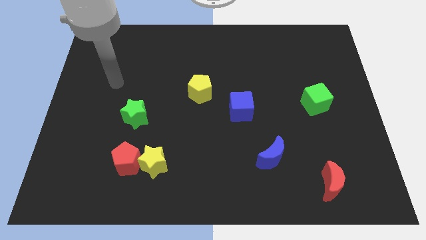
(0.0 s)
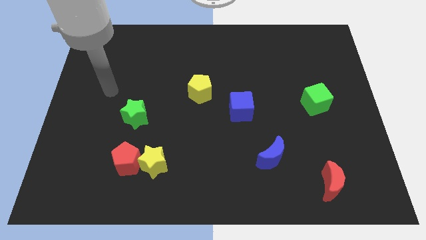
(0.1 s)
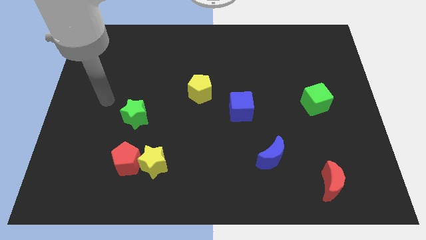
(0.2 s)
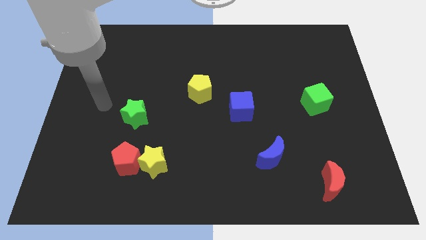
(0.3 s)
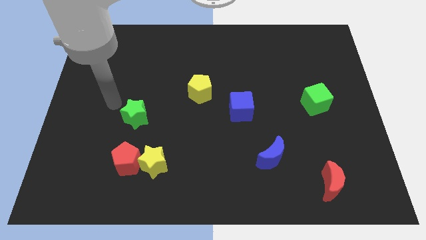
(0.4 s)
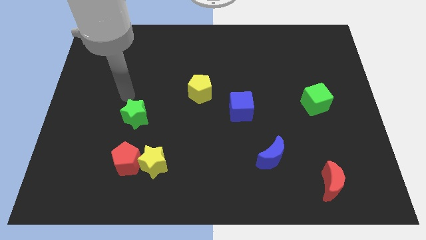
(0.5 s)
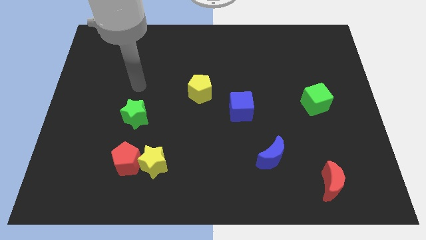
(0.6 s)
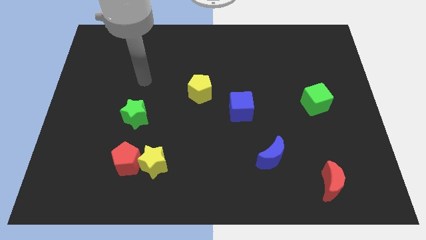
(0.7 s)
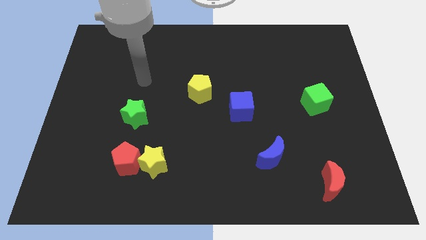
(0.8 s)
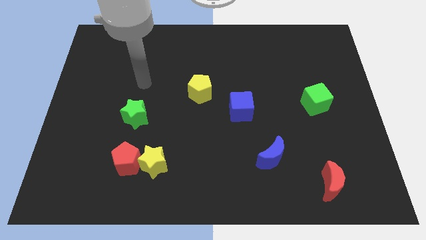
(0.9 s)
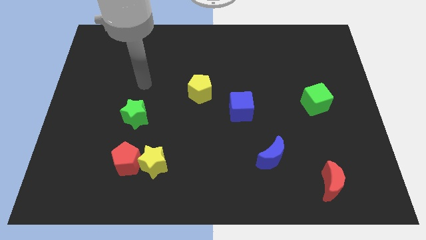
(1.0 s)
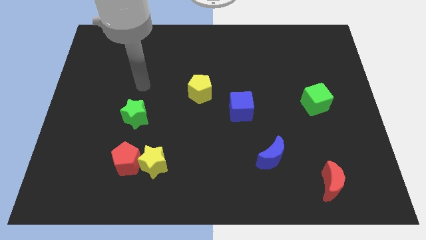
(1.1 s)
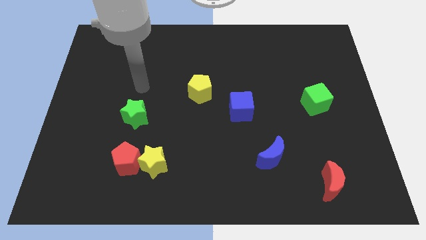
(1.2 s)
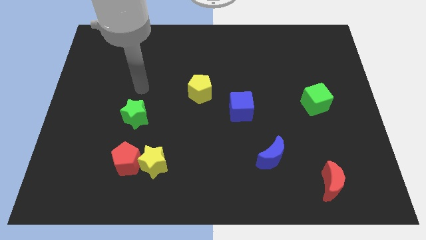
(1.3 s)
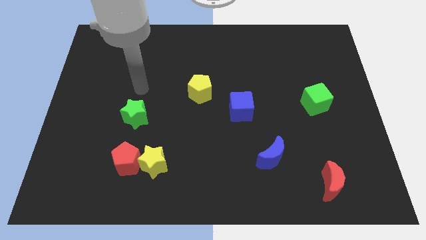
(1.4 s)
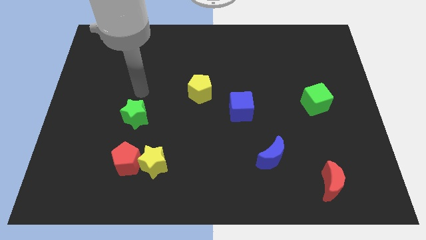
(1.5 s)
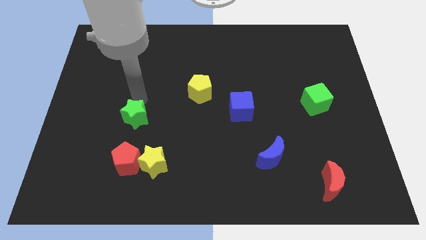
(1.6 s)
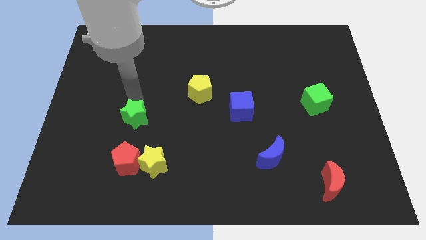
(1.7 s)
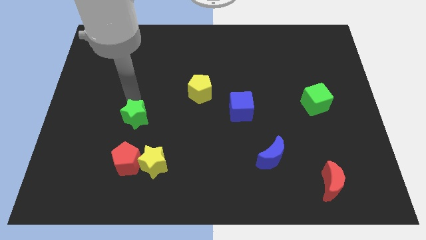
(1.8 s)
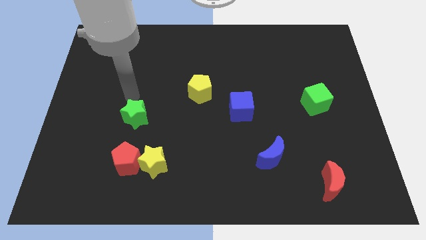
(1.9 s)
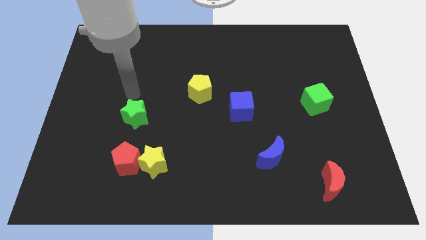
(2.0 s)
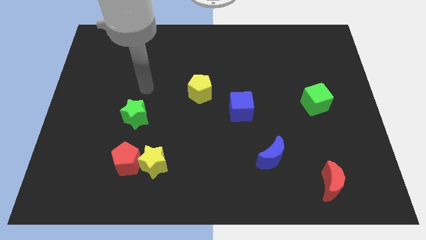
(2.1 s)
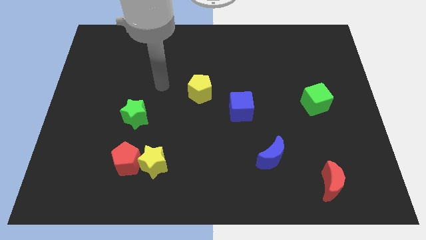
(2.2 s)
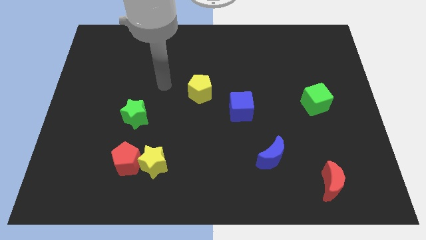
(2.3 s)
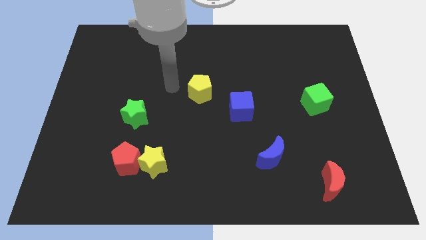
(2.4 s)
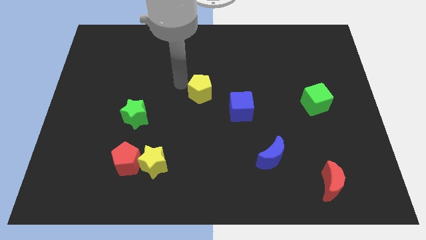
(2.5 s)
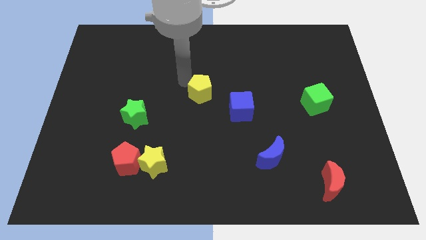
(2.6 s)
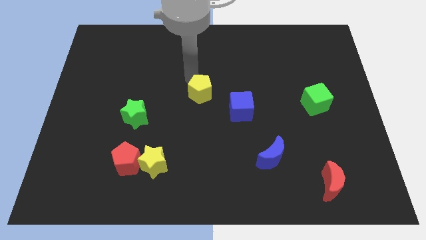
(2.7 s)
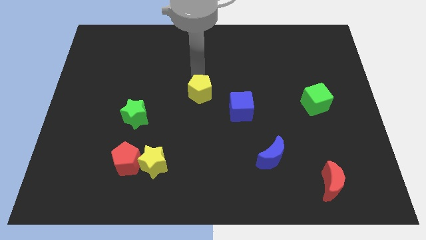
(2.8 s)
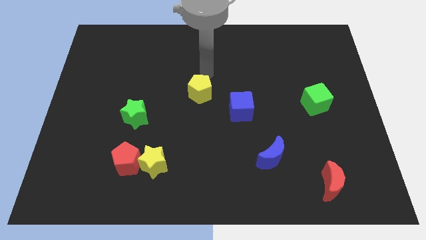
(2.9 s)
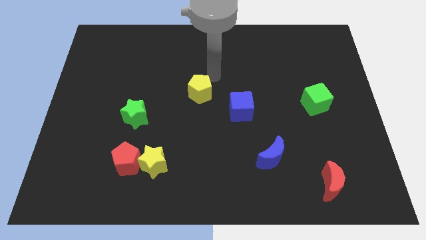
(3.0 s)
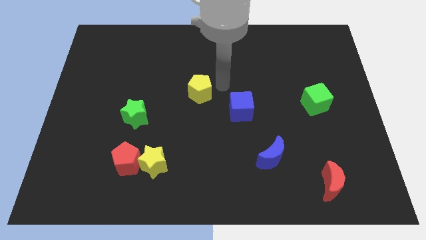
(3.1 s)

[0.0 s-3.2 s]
move your arm to the center of the board

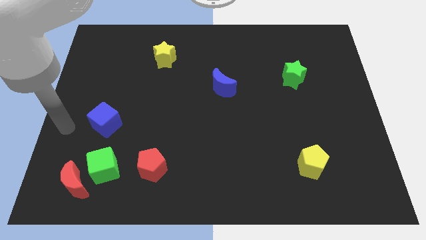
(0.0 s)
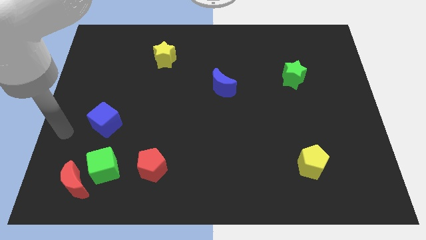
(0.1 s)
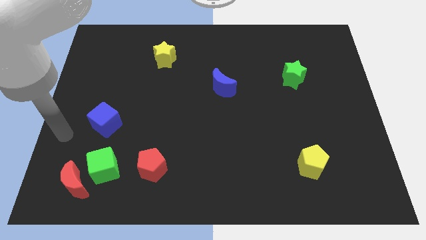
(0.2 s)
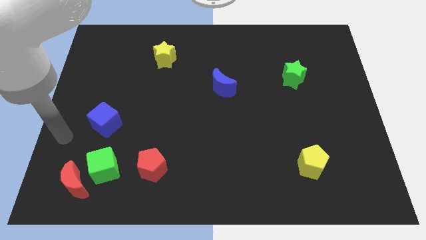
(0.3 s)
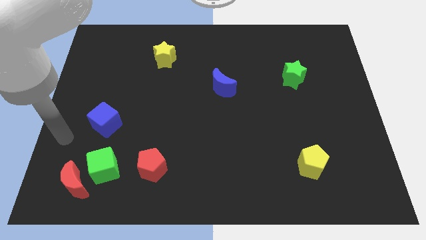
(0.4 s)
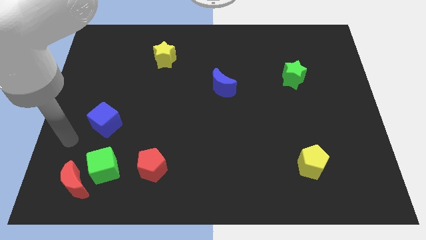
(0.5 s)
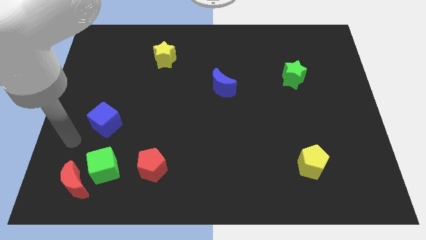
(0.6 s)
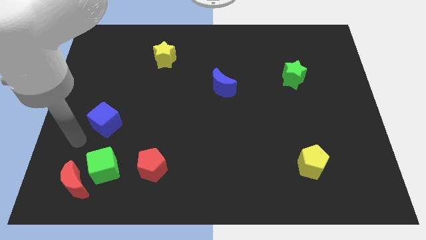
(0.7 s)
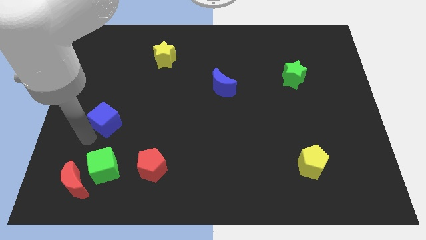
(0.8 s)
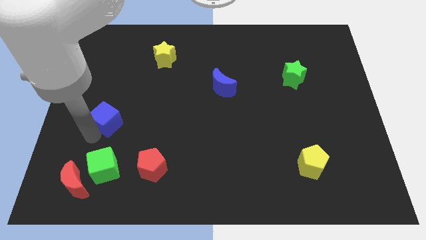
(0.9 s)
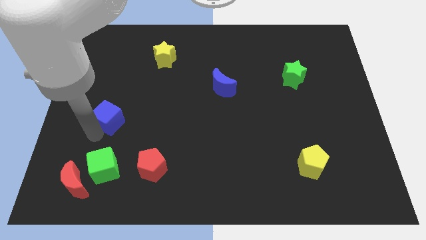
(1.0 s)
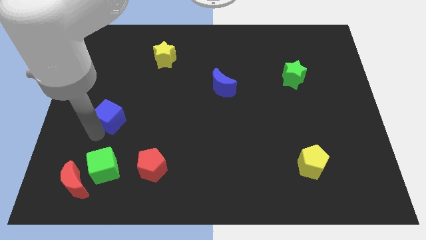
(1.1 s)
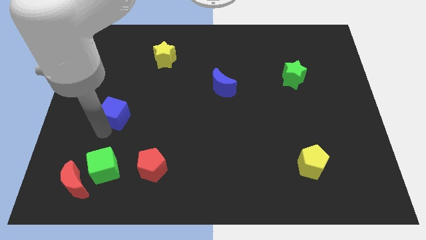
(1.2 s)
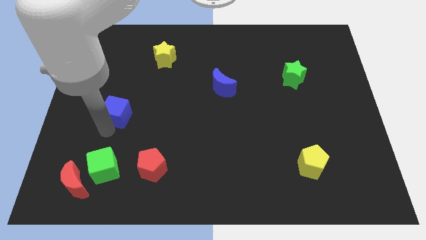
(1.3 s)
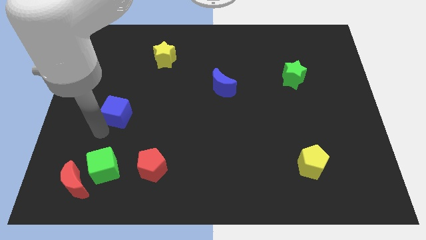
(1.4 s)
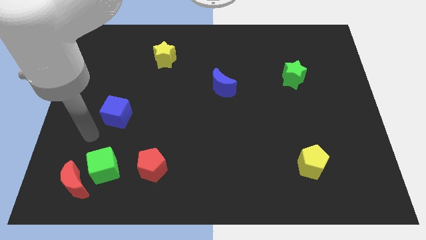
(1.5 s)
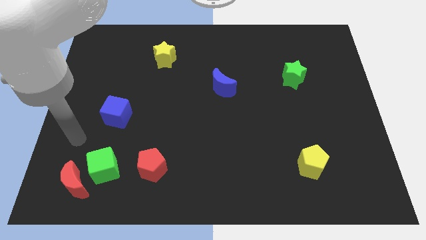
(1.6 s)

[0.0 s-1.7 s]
place the blue cube diagonally top left to red pentagon

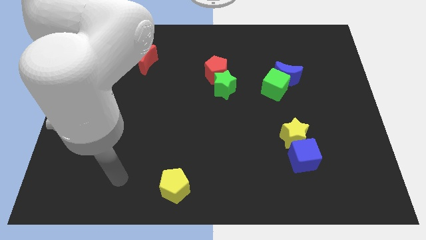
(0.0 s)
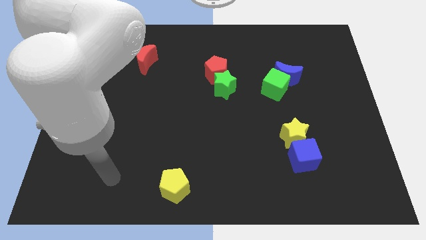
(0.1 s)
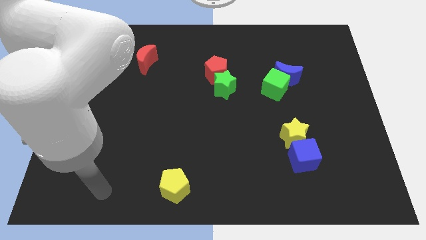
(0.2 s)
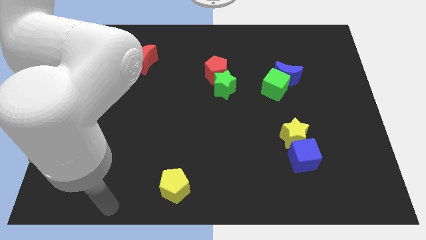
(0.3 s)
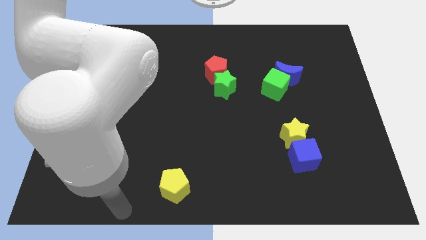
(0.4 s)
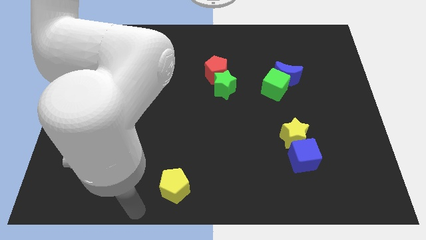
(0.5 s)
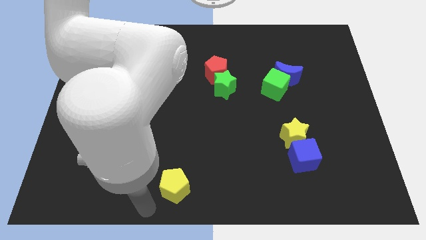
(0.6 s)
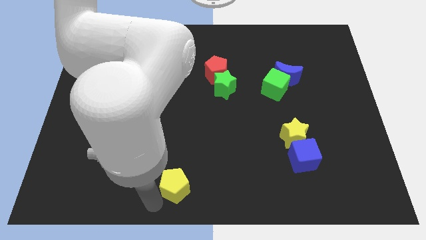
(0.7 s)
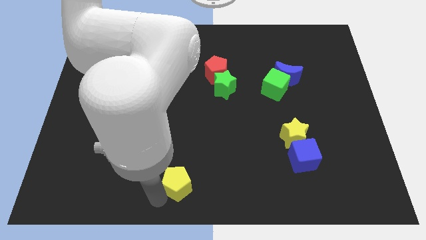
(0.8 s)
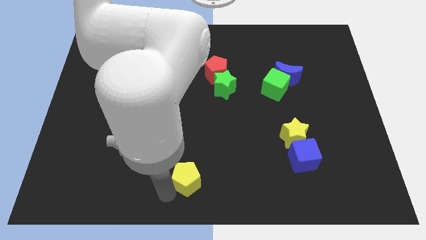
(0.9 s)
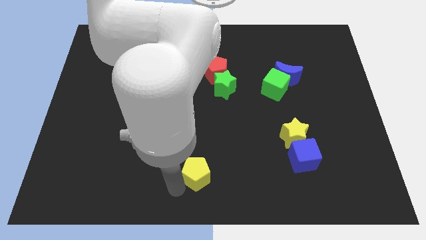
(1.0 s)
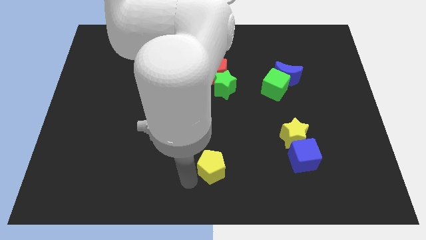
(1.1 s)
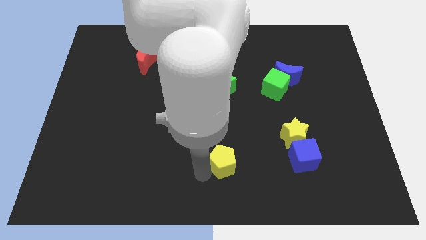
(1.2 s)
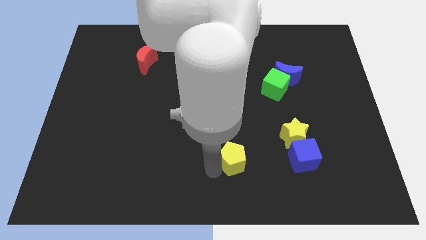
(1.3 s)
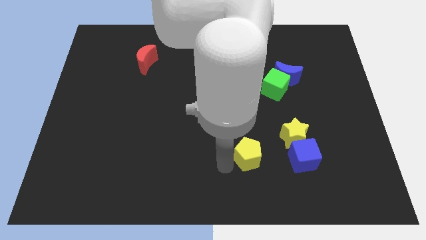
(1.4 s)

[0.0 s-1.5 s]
put the yellow pentagon parallel left to the blue cube

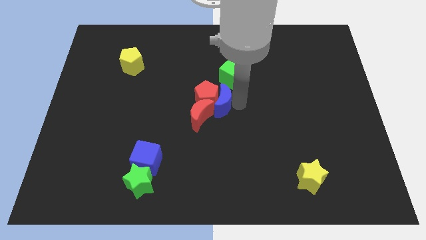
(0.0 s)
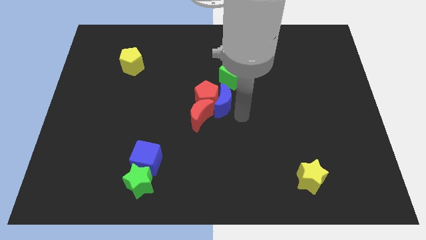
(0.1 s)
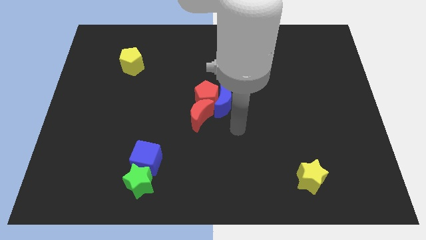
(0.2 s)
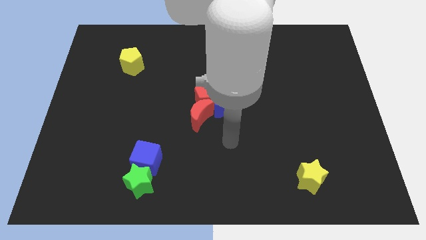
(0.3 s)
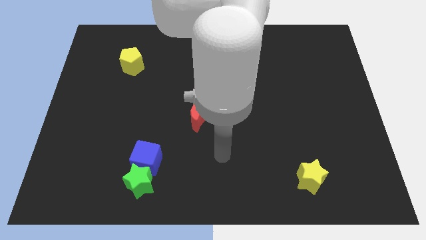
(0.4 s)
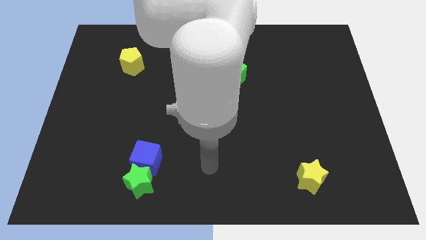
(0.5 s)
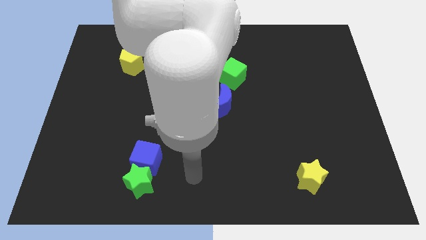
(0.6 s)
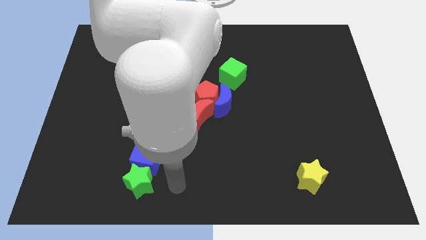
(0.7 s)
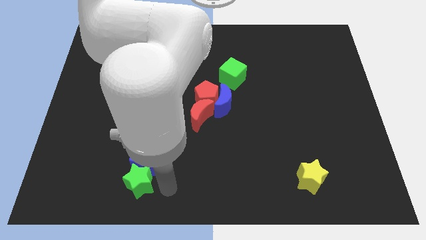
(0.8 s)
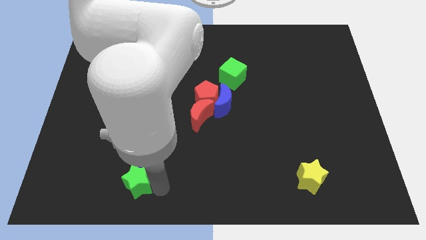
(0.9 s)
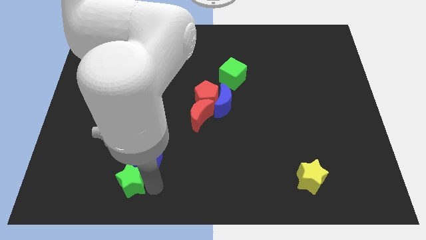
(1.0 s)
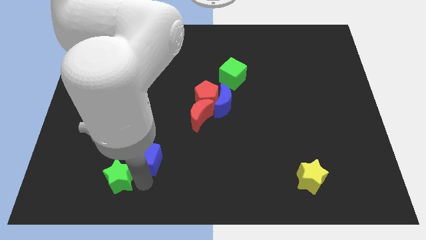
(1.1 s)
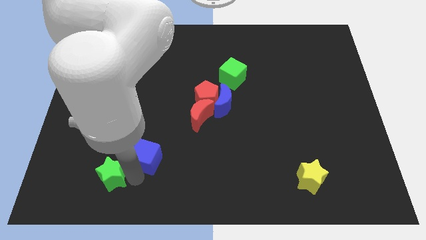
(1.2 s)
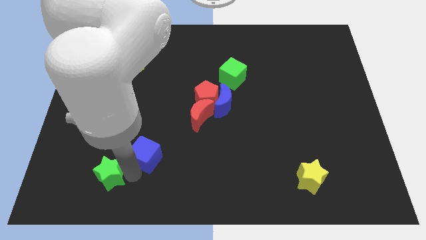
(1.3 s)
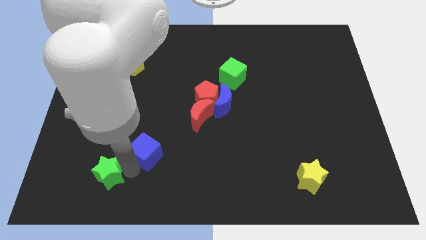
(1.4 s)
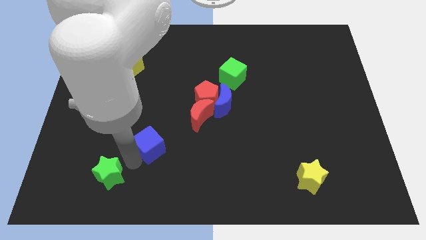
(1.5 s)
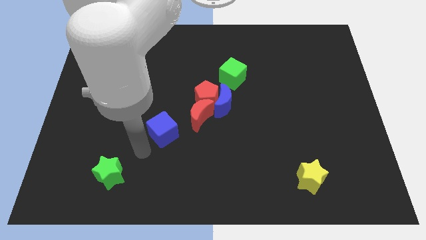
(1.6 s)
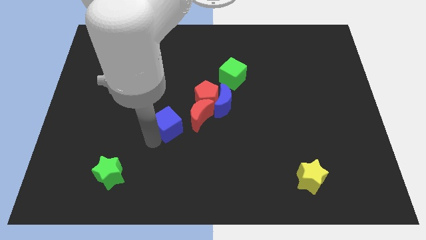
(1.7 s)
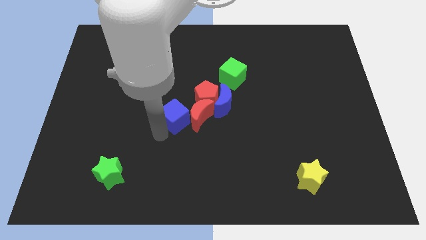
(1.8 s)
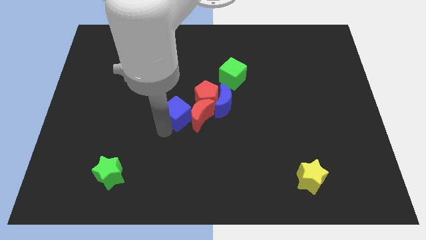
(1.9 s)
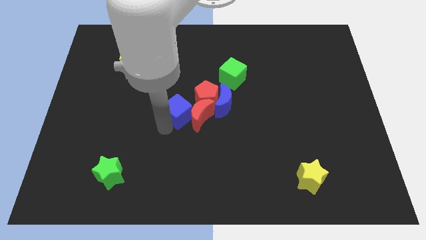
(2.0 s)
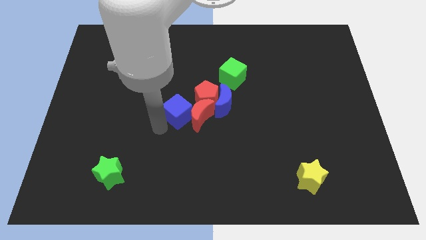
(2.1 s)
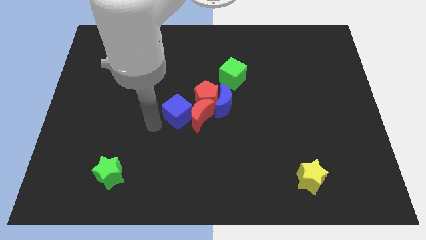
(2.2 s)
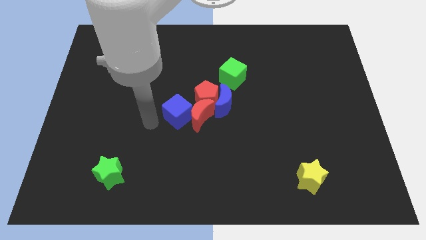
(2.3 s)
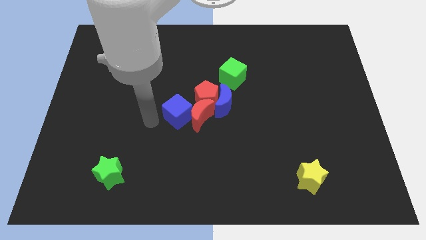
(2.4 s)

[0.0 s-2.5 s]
move the arm away from the blue moon
